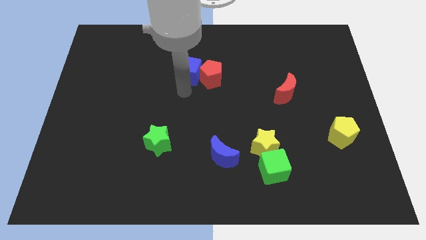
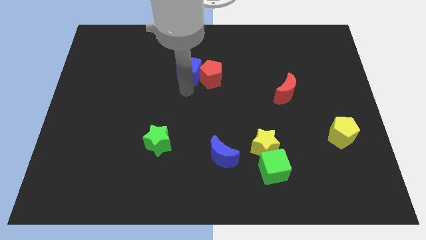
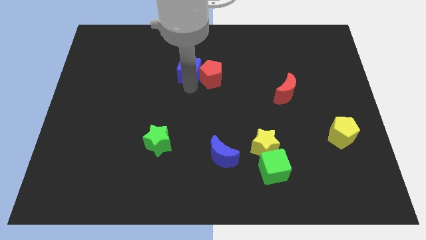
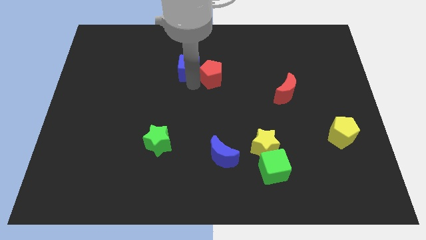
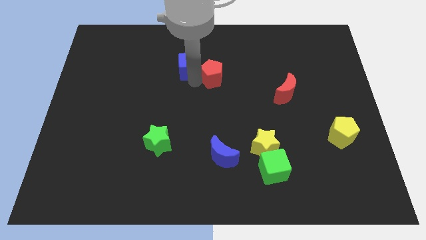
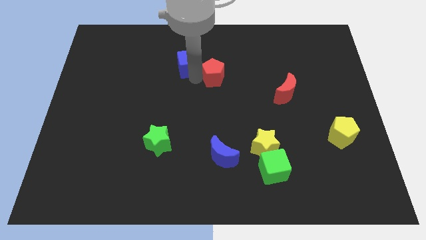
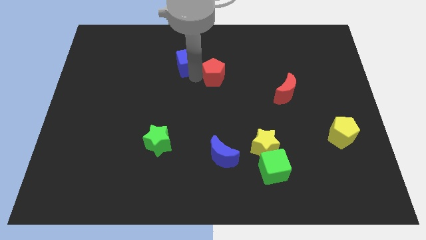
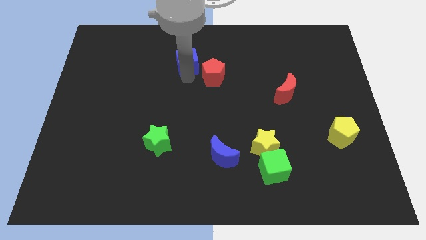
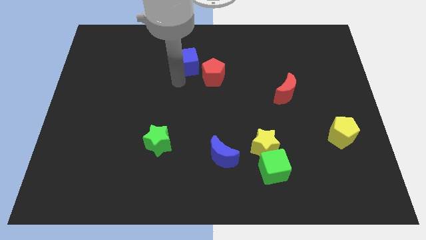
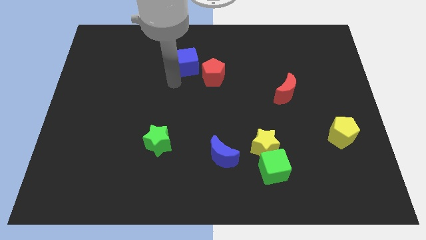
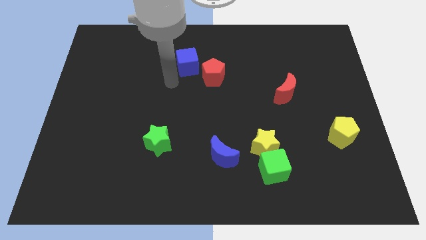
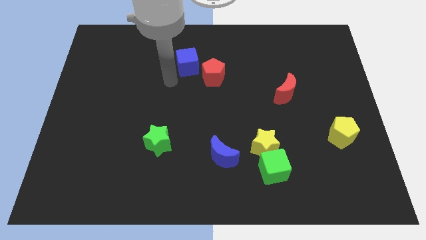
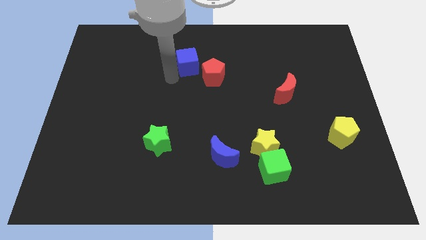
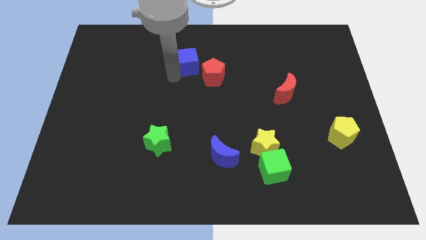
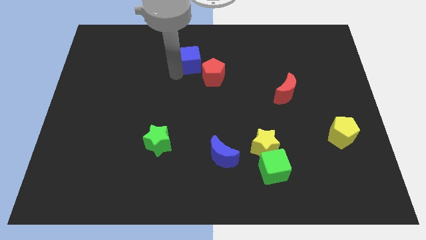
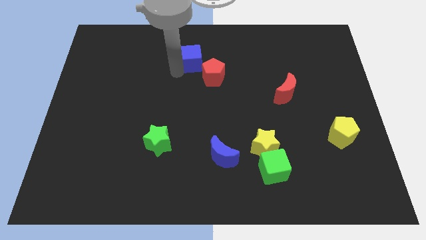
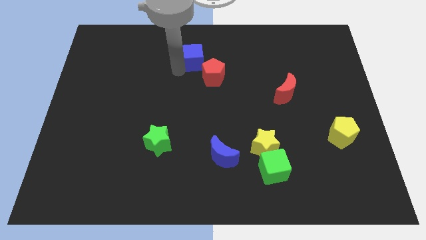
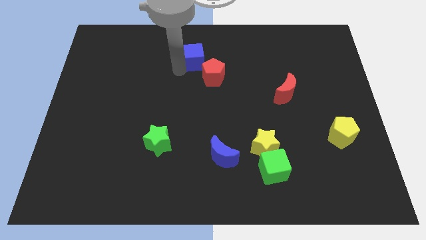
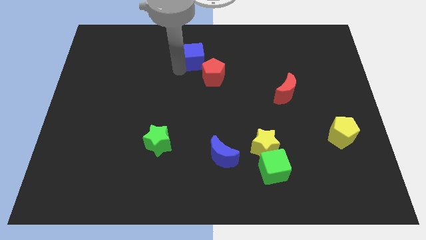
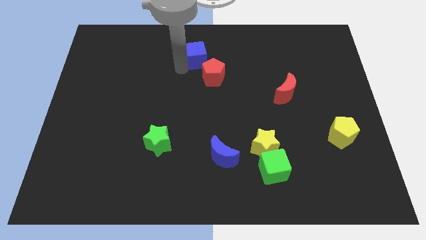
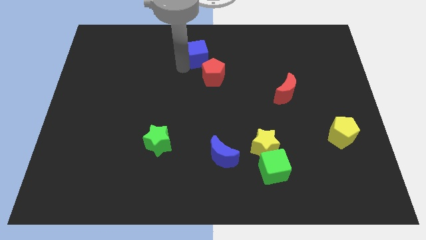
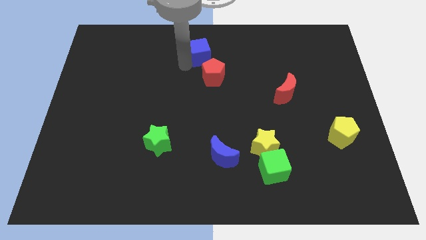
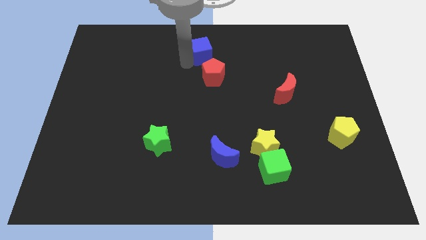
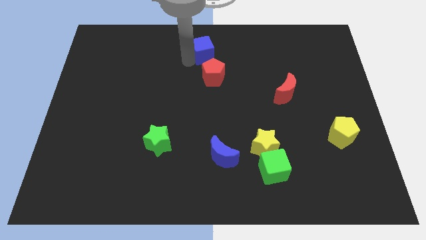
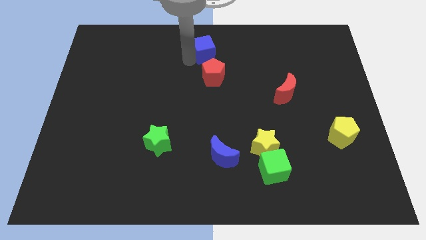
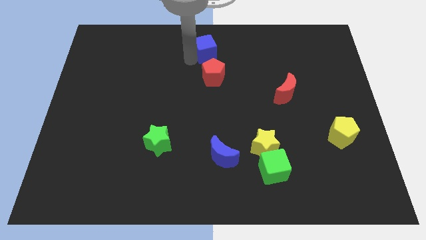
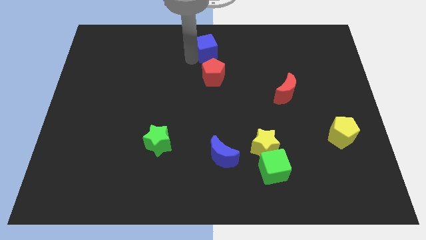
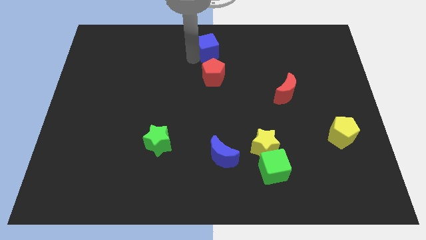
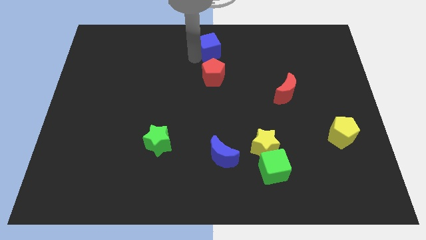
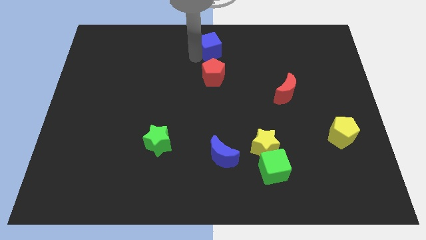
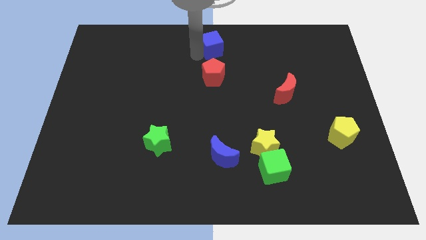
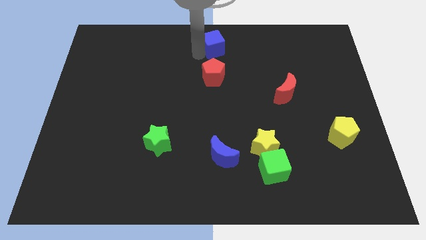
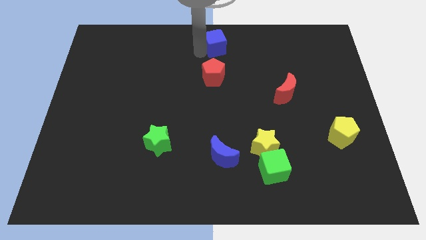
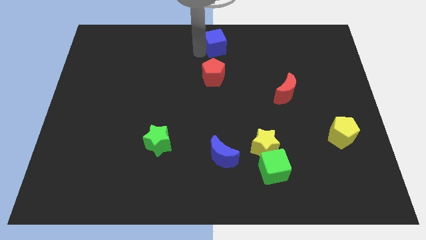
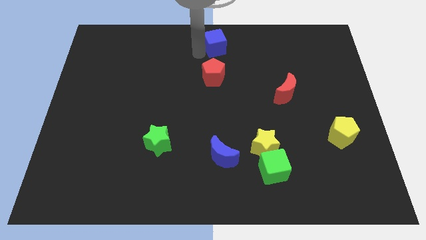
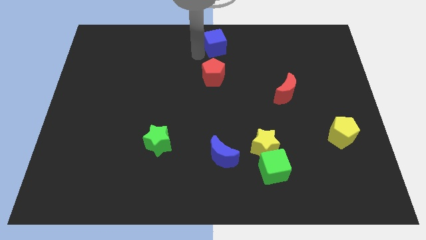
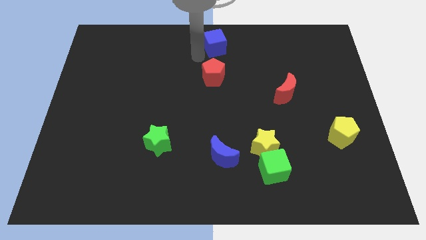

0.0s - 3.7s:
move the blue cube to the top of the red pentagon

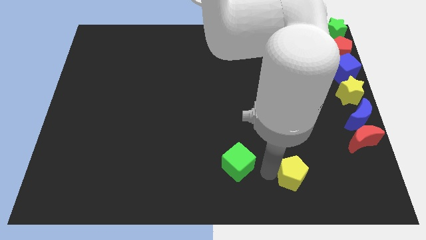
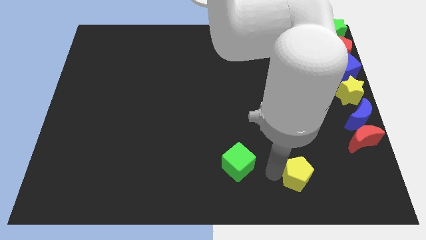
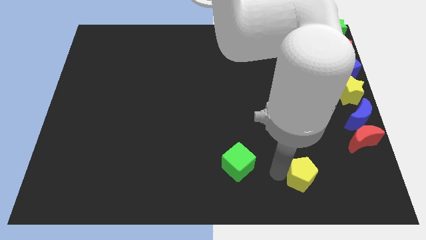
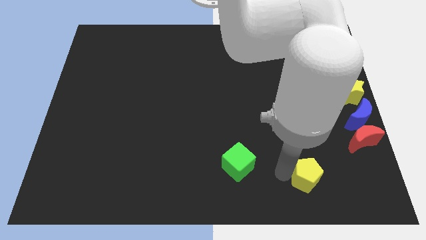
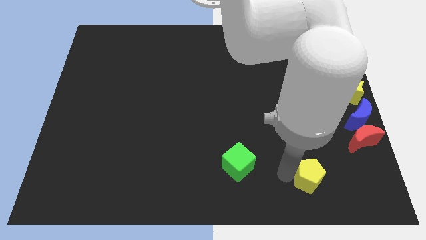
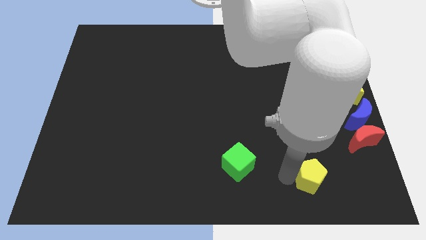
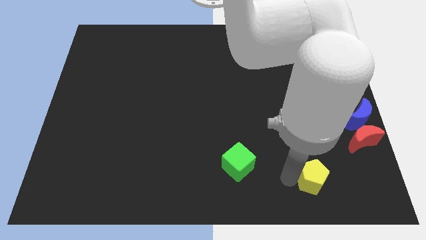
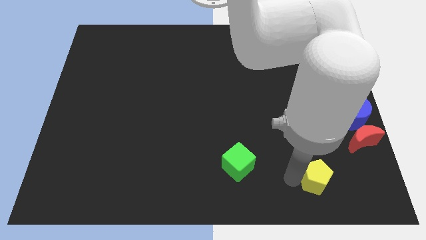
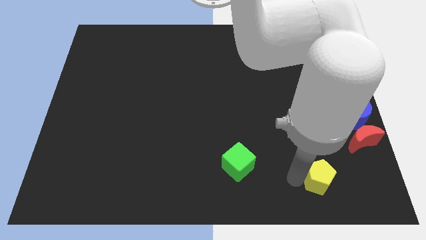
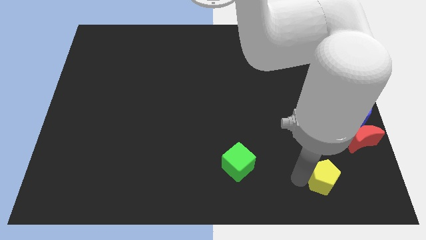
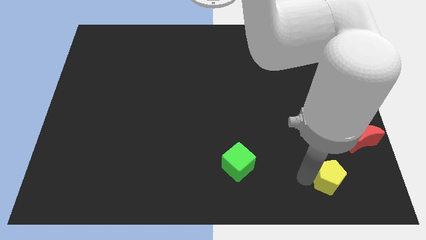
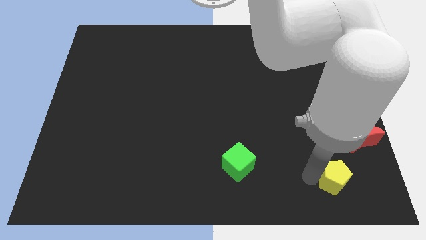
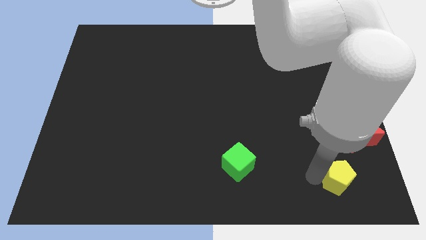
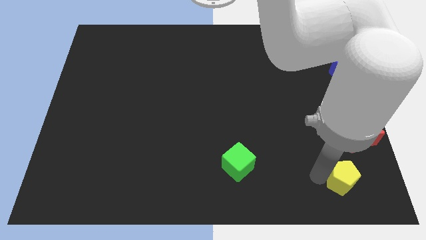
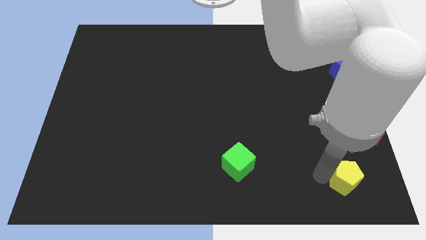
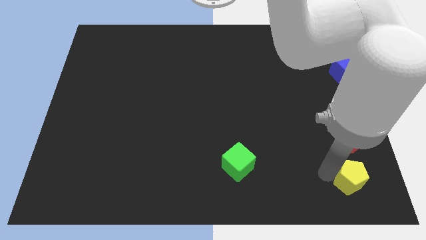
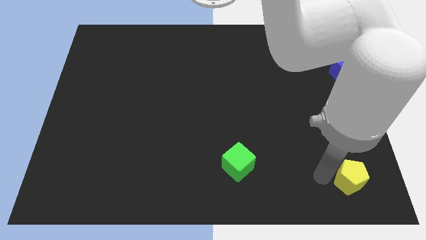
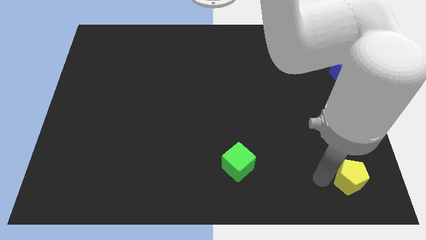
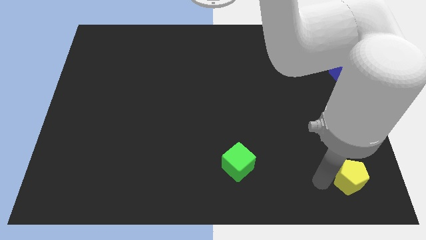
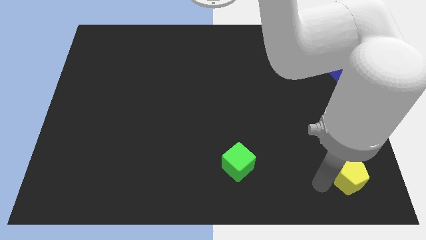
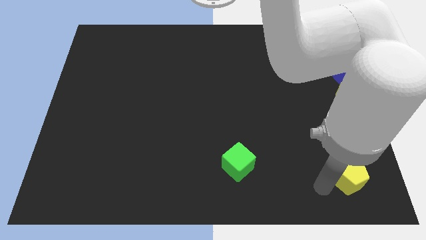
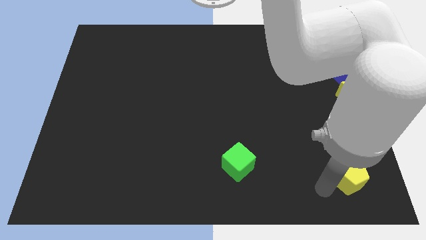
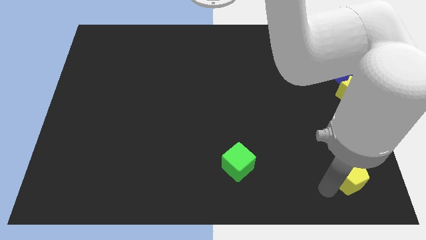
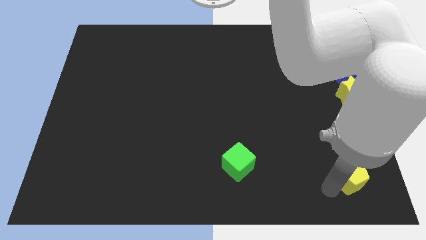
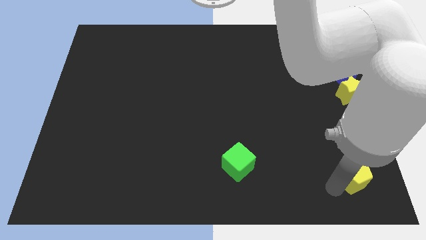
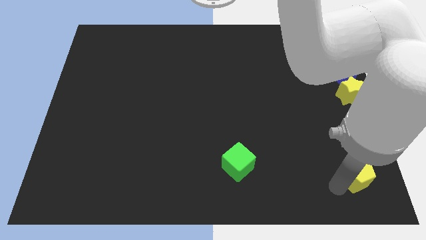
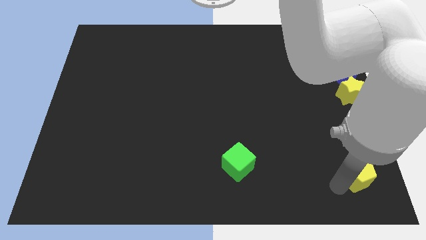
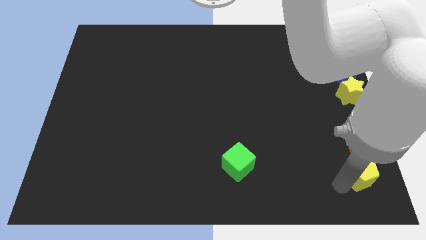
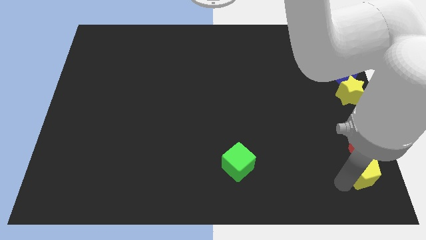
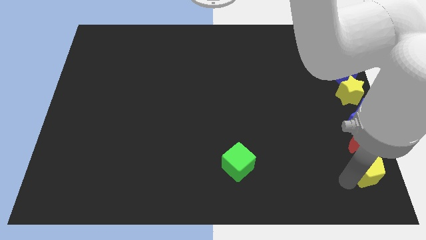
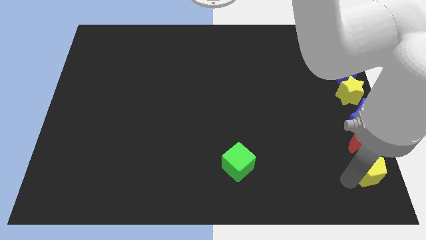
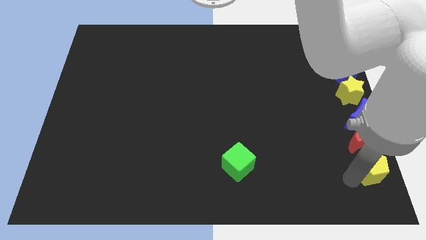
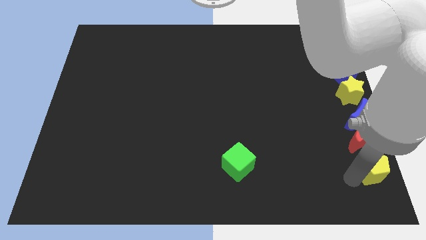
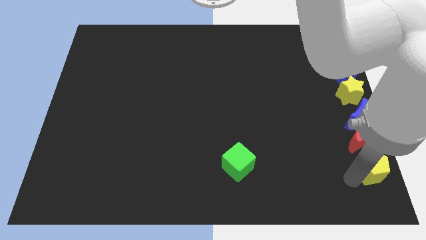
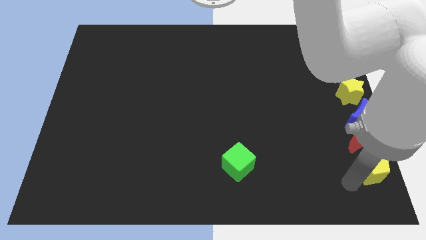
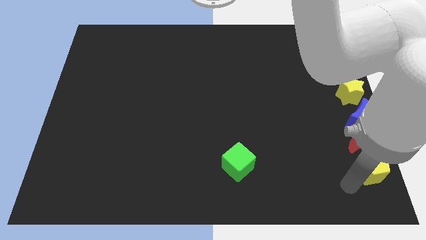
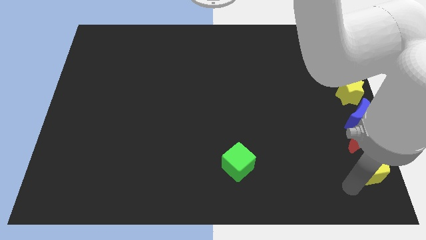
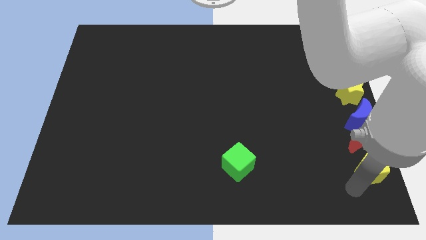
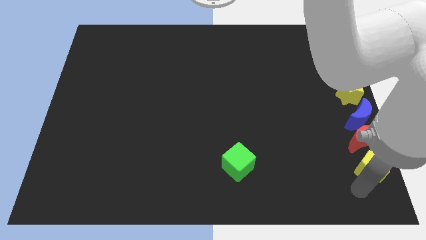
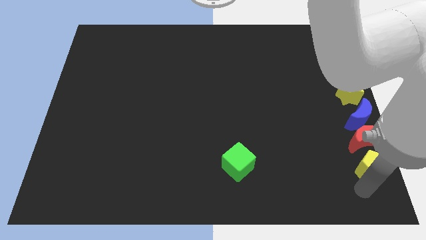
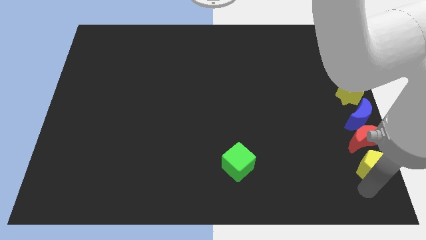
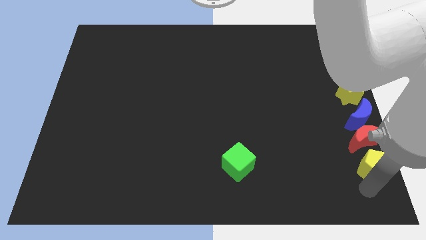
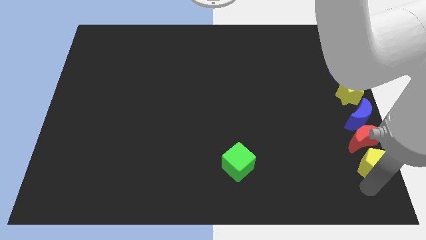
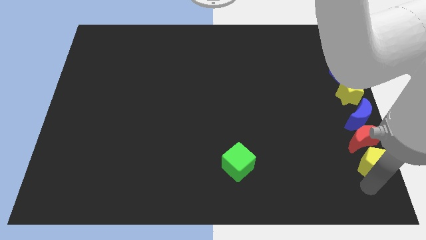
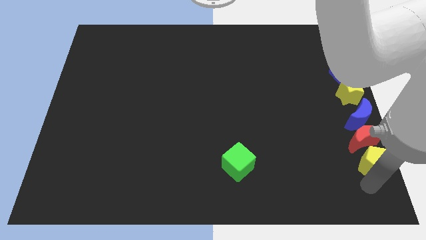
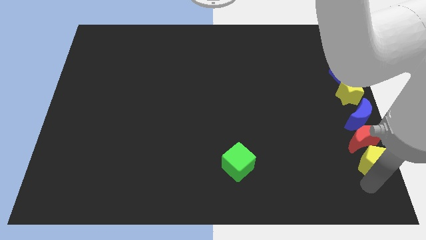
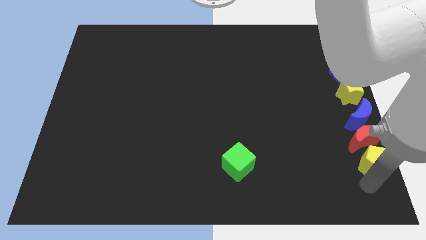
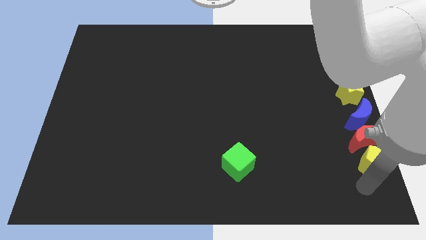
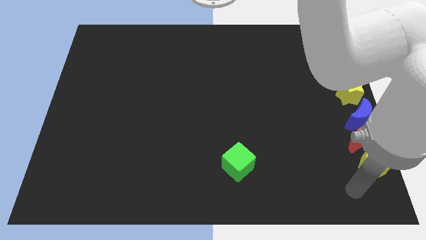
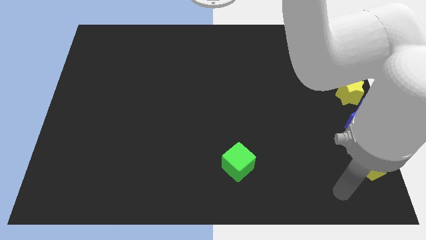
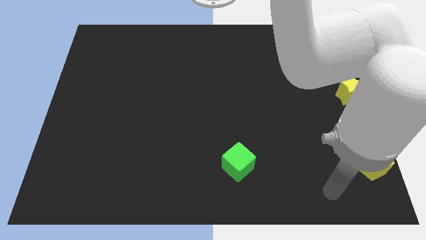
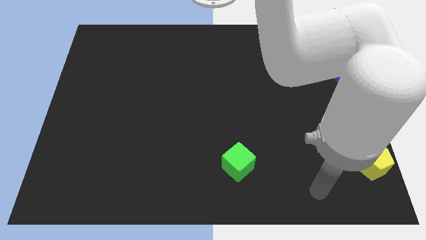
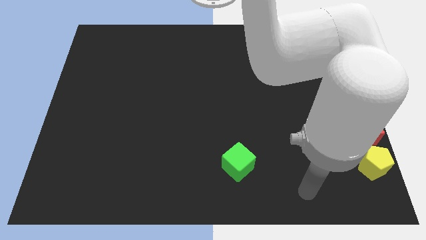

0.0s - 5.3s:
place the yellow pentagon below the red crescent
